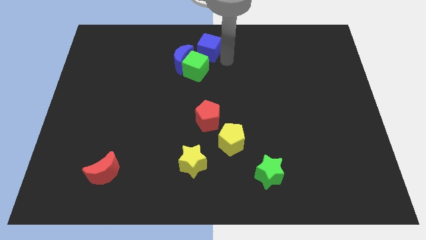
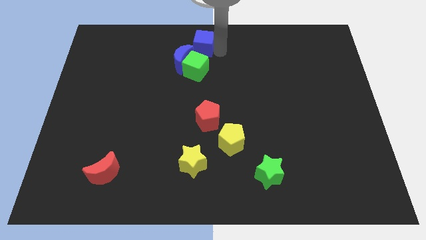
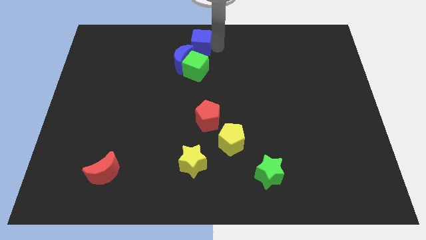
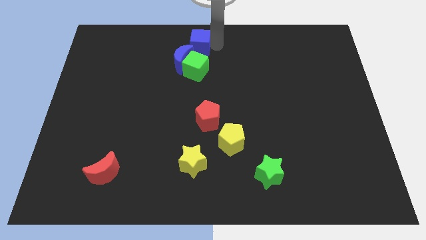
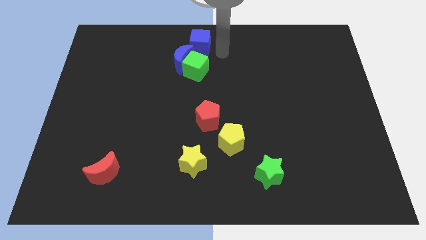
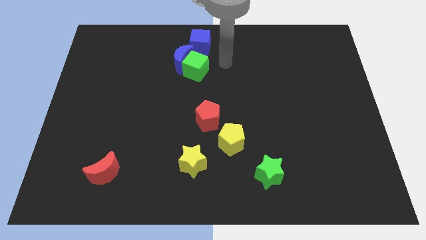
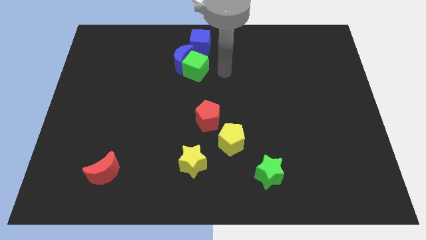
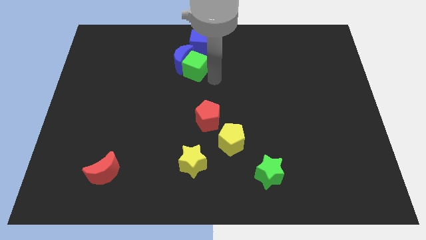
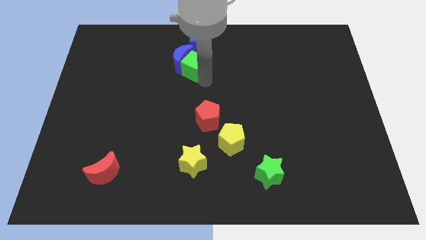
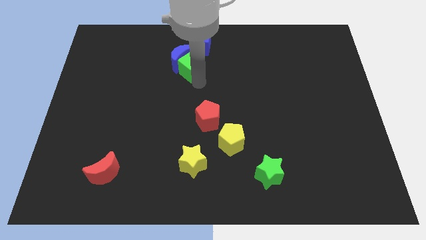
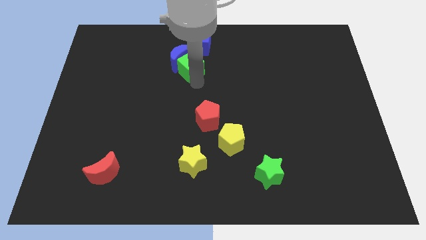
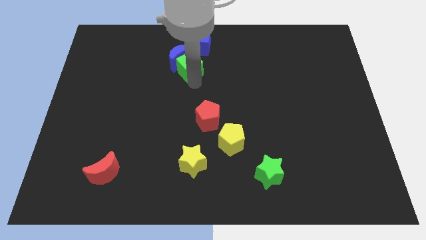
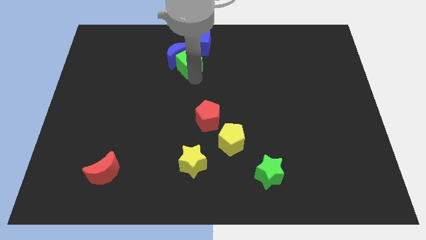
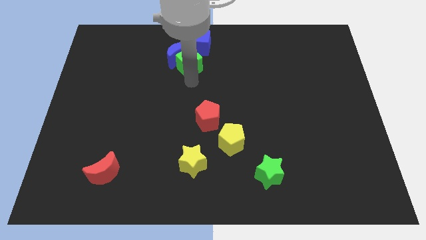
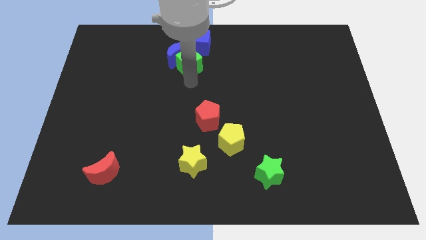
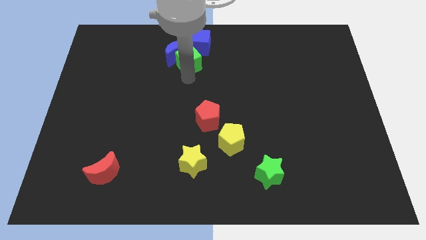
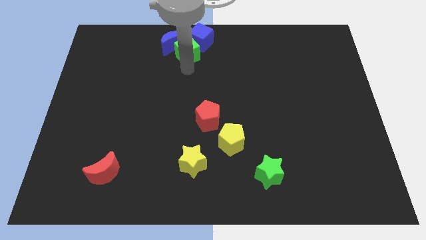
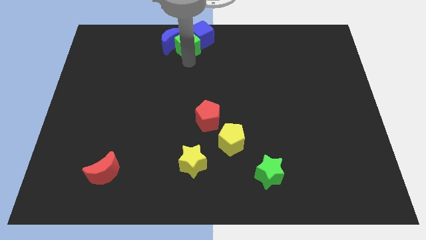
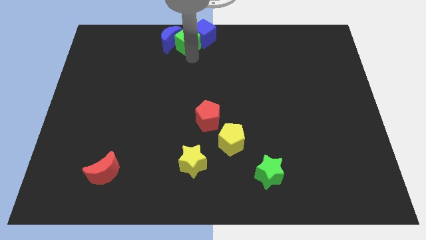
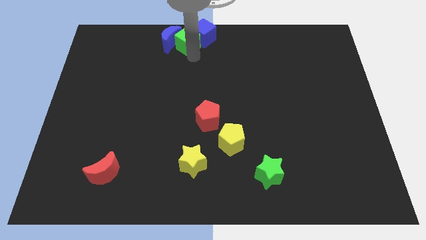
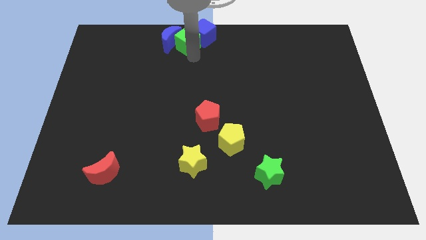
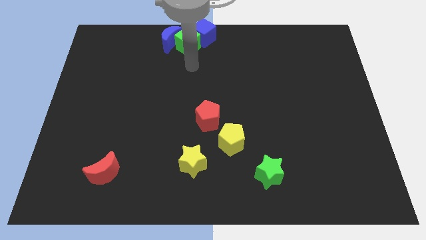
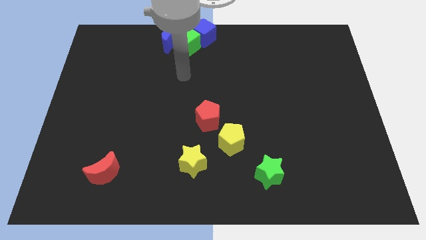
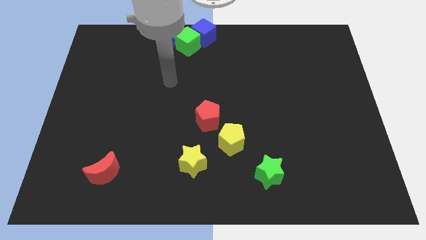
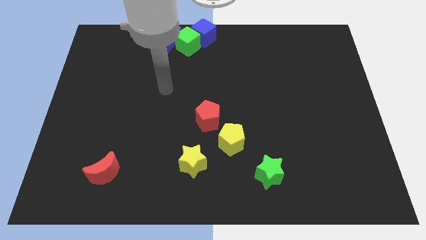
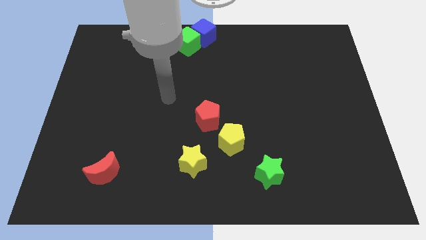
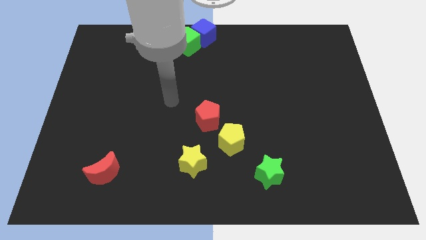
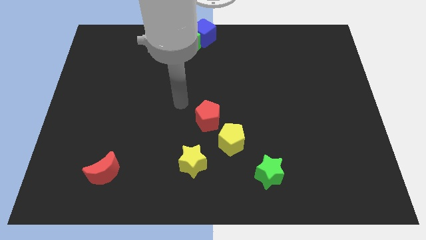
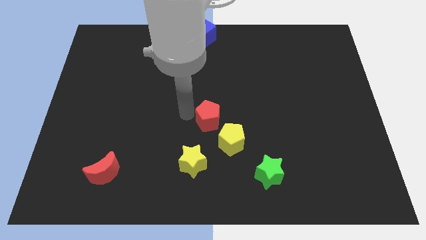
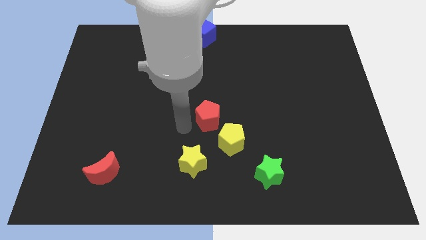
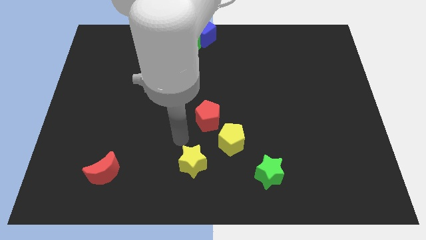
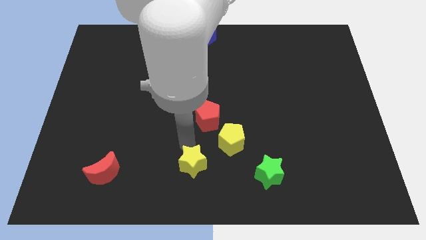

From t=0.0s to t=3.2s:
move the green cube in between blue cube and blue moon

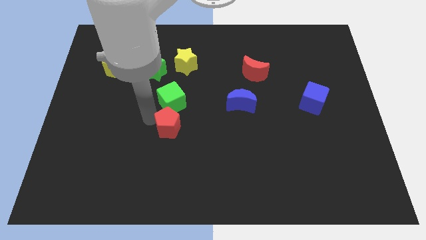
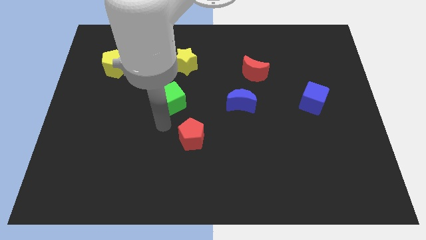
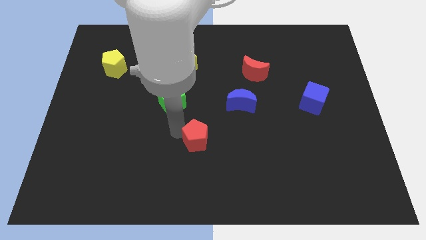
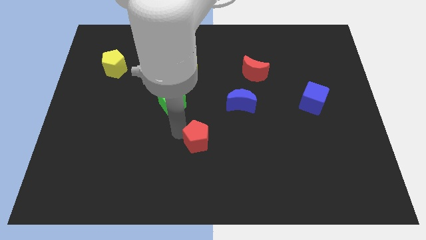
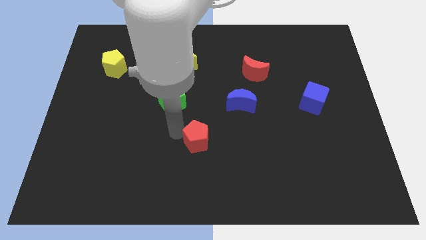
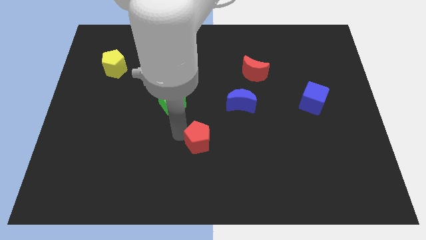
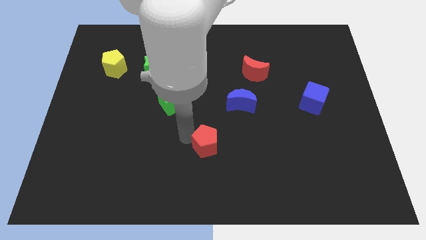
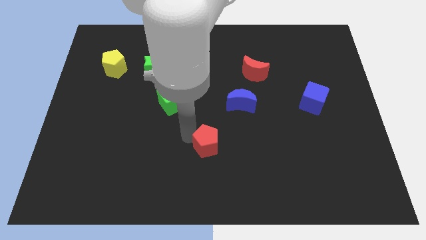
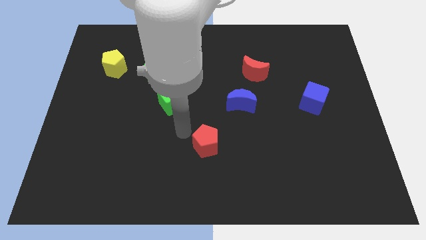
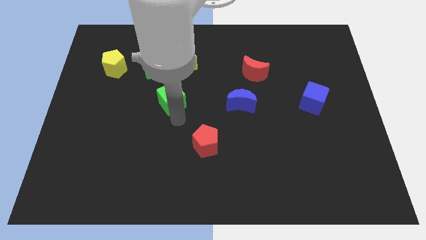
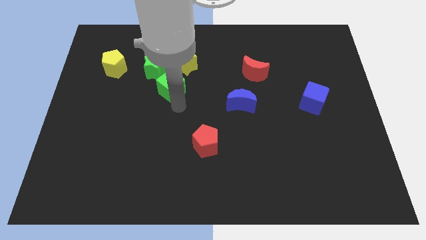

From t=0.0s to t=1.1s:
place the red pentagon below the blue moon

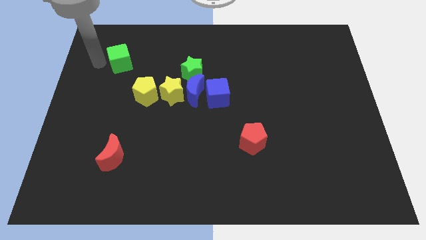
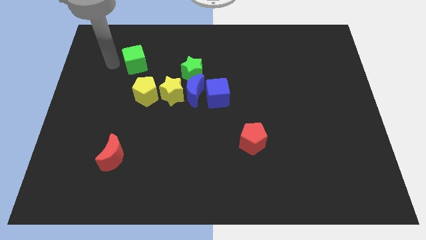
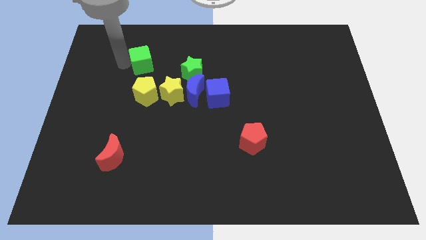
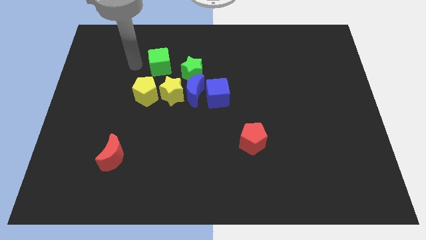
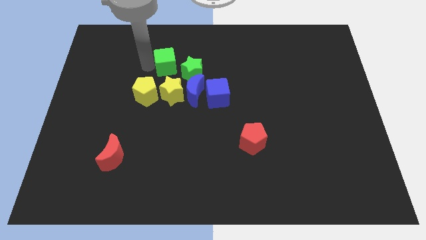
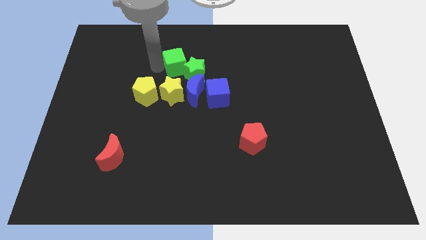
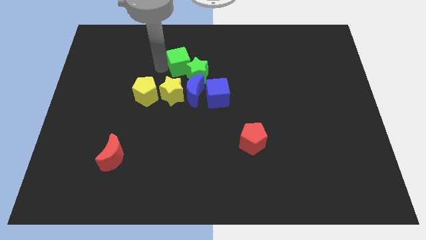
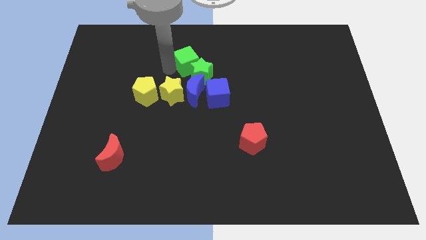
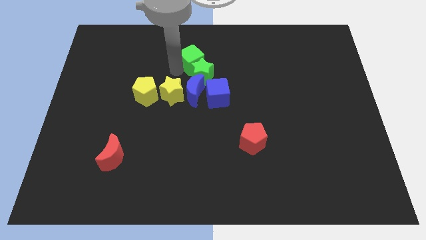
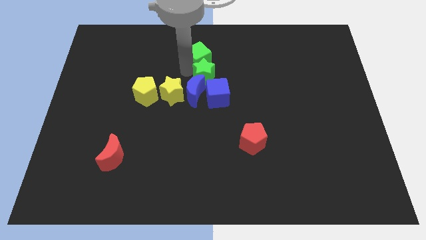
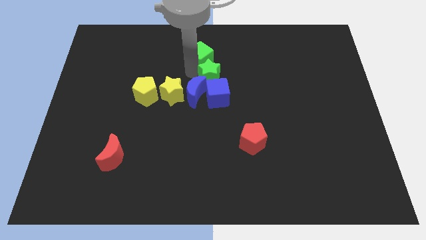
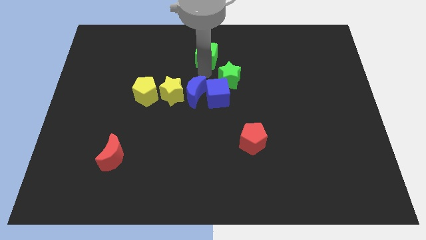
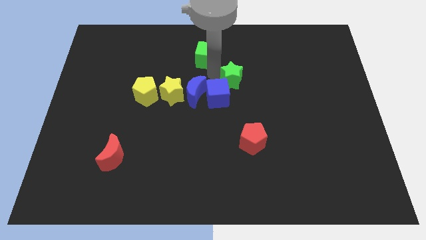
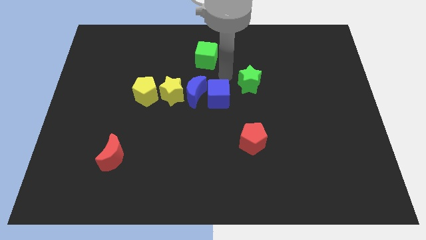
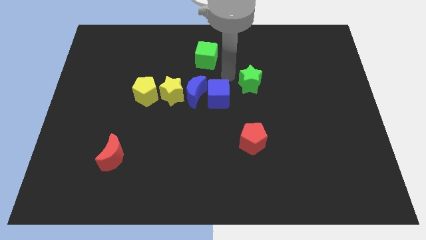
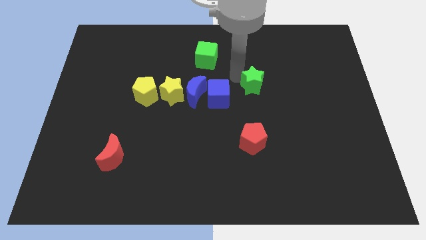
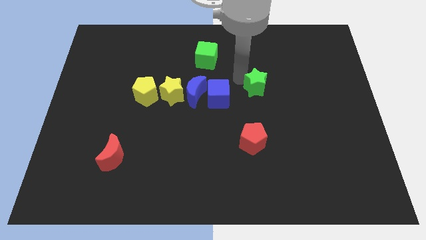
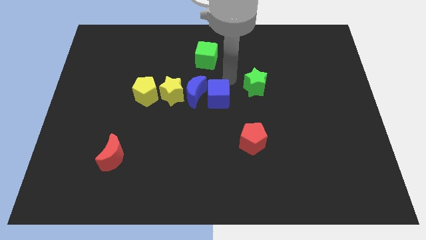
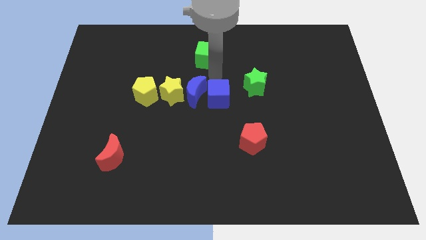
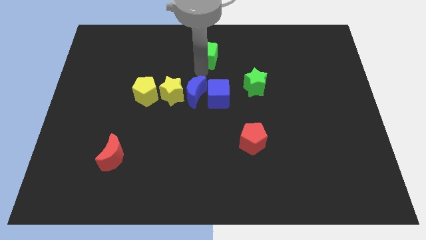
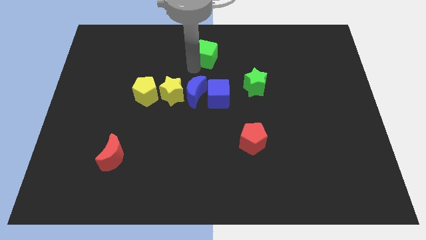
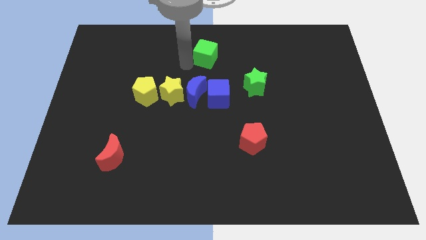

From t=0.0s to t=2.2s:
move the green cube and the green star towards right

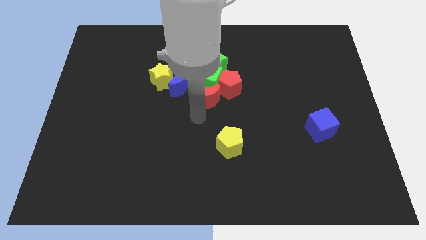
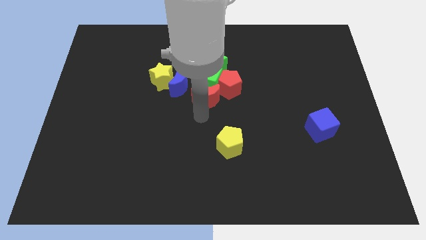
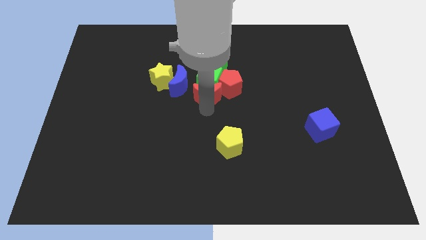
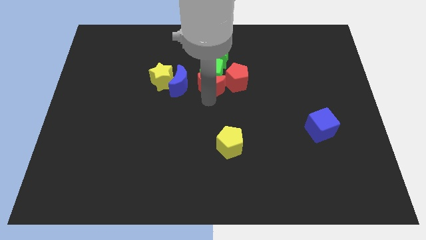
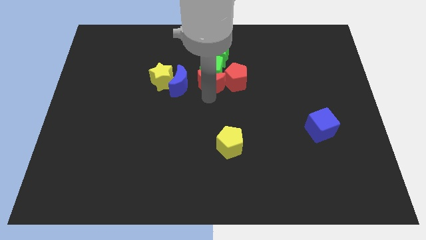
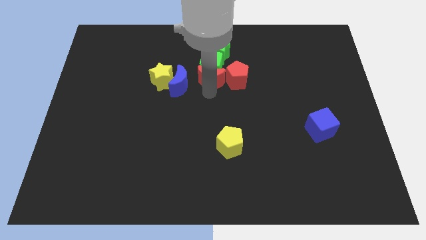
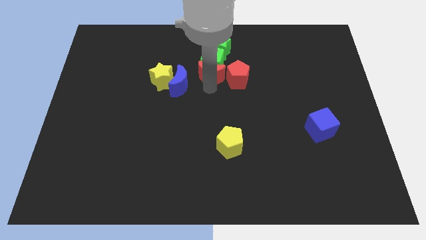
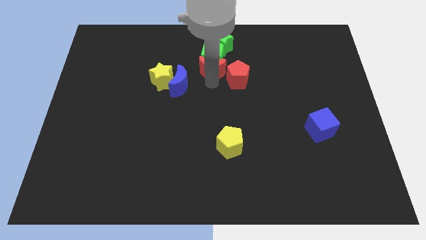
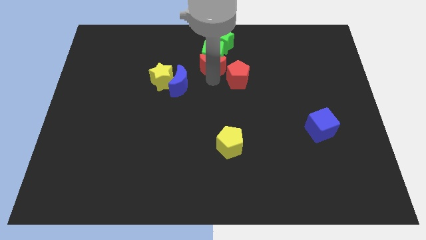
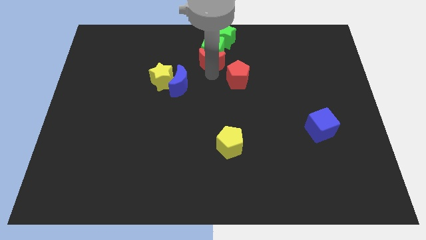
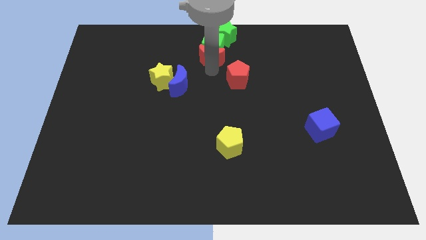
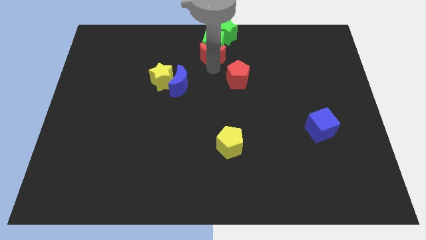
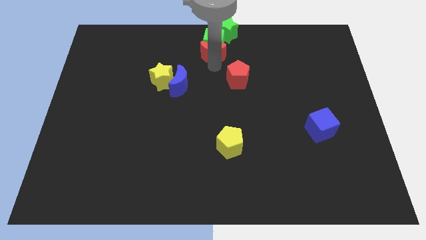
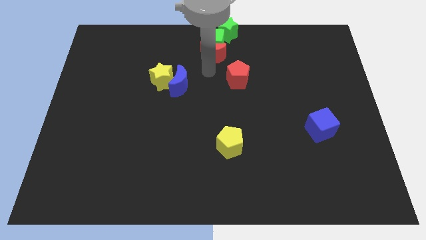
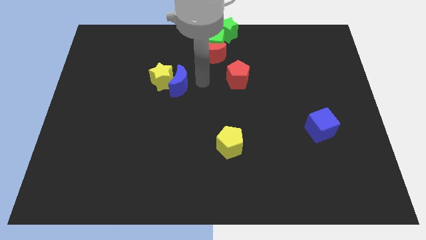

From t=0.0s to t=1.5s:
place both the green blocks and red crescent at the top center of the board

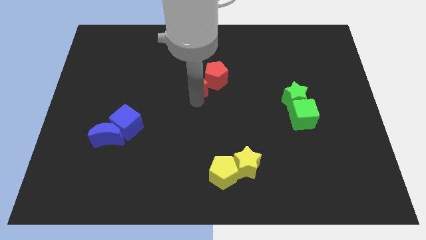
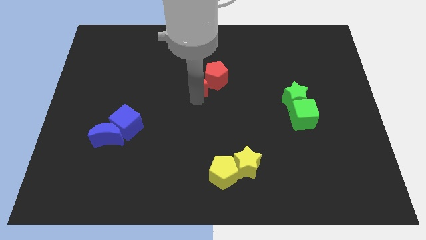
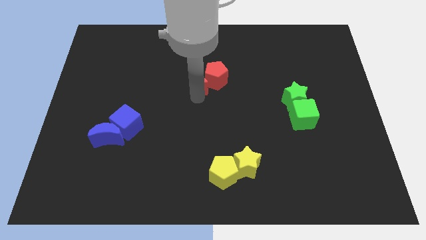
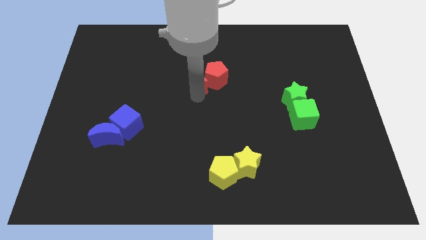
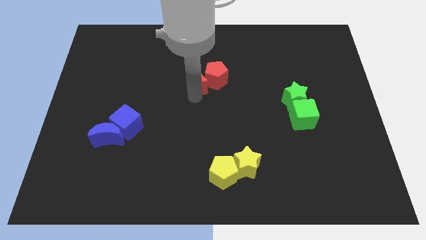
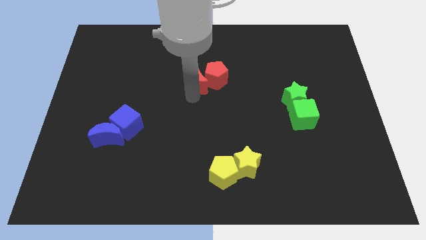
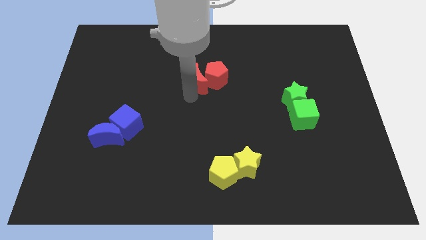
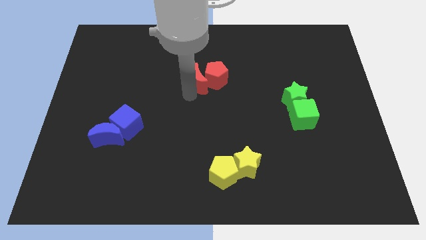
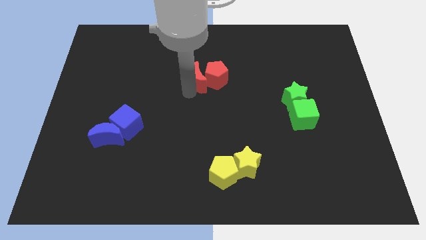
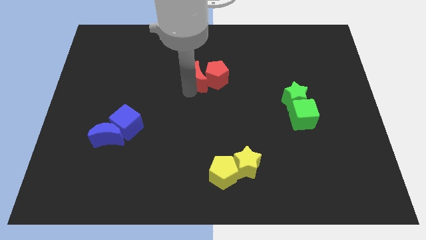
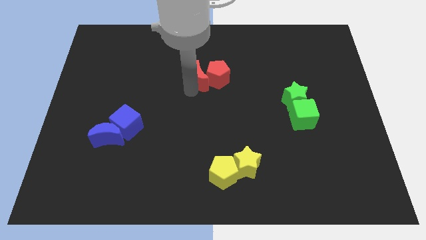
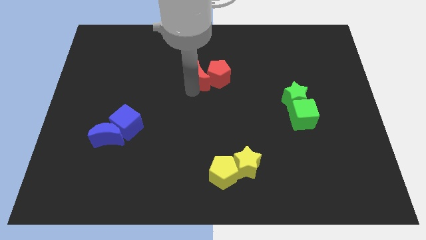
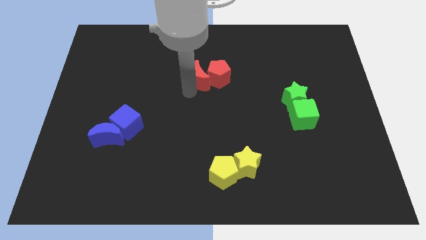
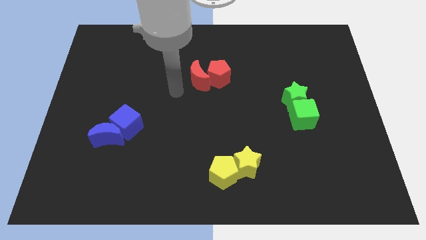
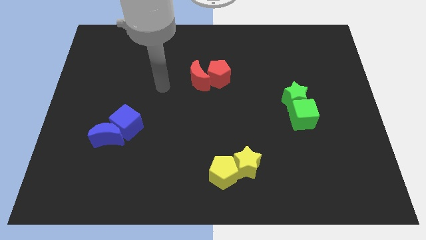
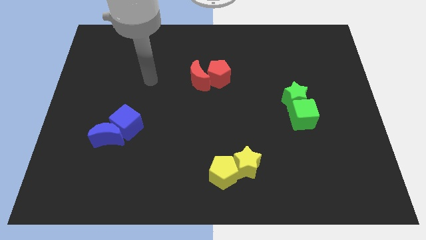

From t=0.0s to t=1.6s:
push the red crescent into the red pentagon
